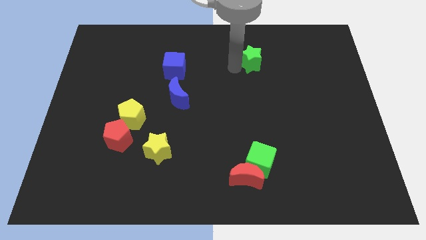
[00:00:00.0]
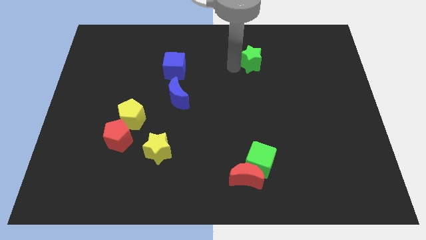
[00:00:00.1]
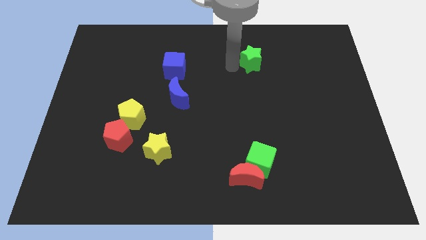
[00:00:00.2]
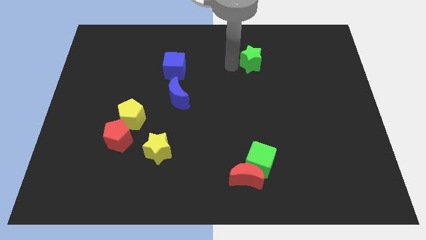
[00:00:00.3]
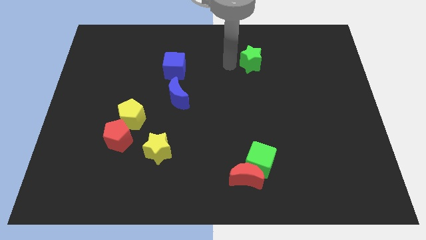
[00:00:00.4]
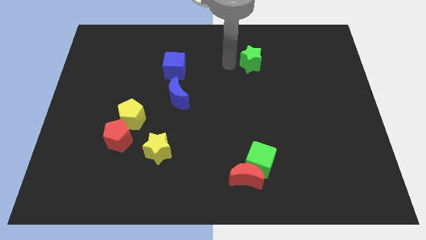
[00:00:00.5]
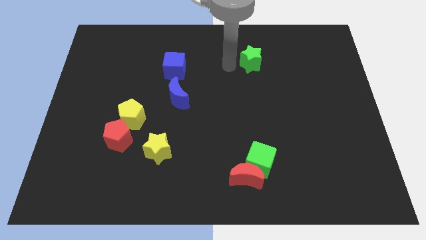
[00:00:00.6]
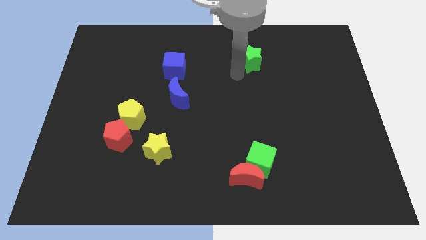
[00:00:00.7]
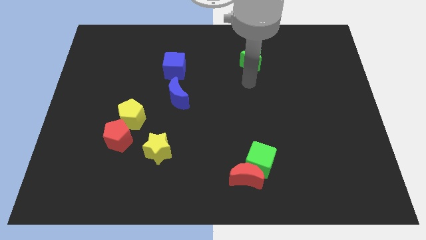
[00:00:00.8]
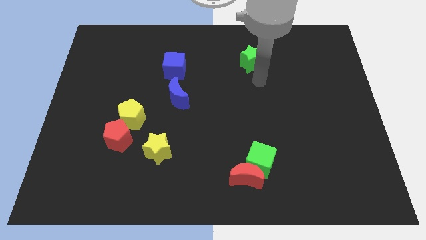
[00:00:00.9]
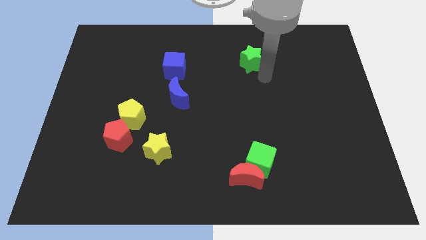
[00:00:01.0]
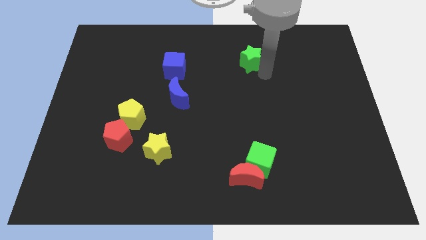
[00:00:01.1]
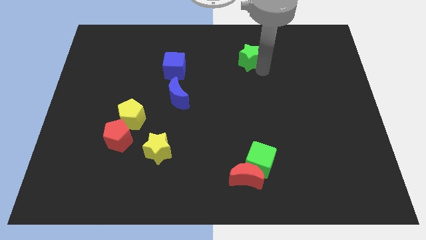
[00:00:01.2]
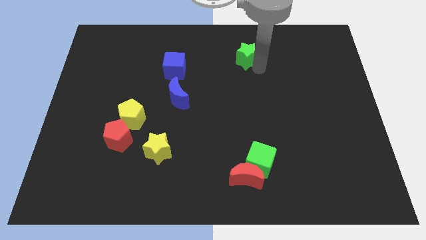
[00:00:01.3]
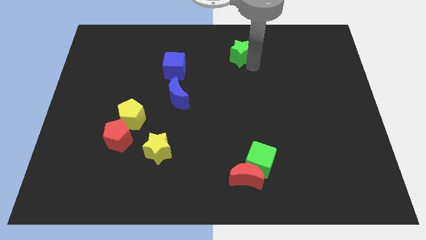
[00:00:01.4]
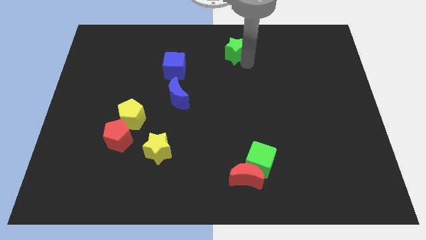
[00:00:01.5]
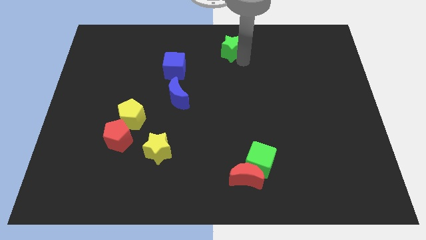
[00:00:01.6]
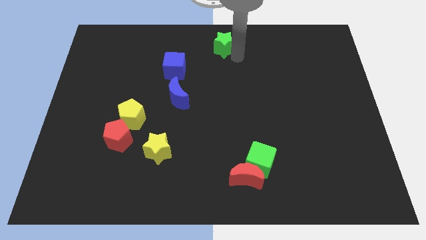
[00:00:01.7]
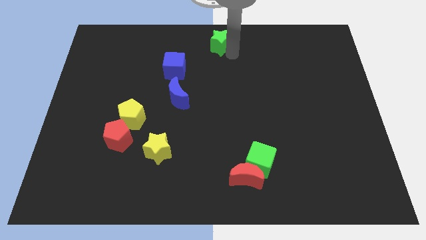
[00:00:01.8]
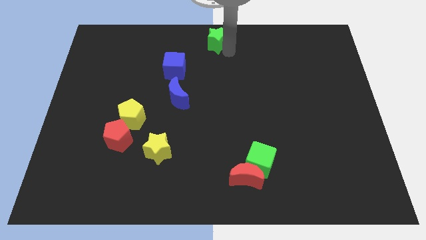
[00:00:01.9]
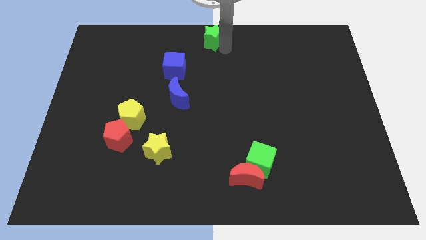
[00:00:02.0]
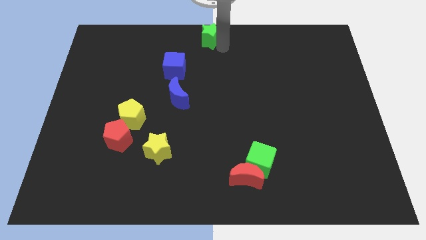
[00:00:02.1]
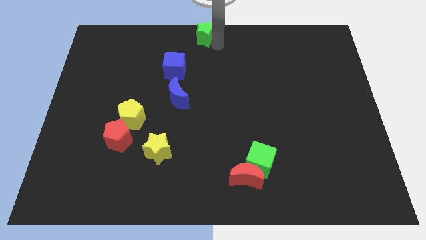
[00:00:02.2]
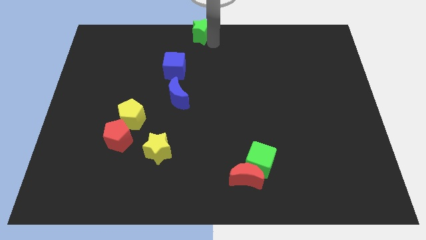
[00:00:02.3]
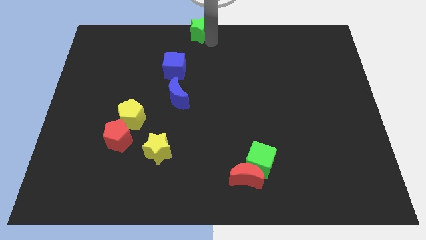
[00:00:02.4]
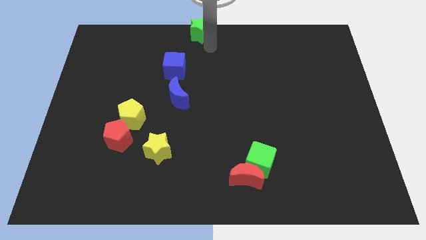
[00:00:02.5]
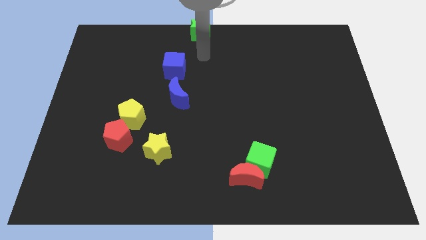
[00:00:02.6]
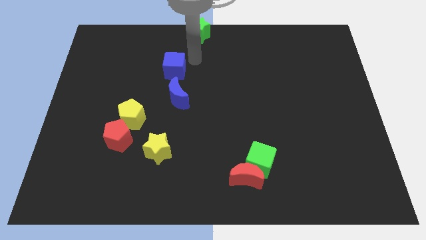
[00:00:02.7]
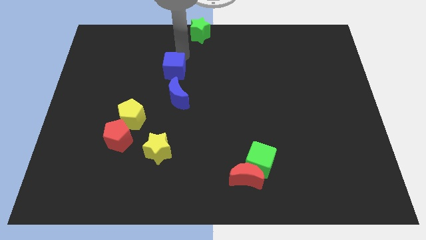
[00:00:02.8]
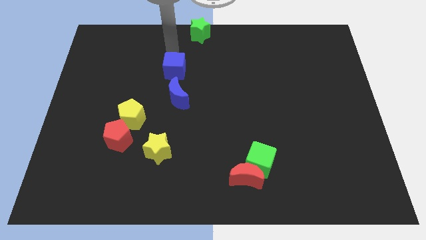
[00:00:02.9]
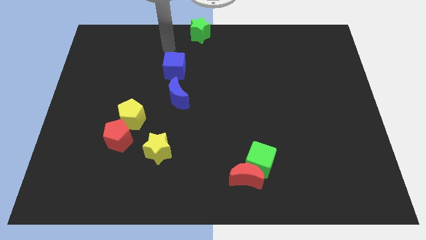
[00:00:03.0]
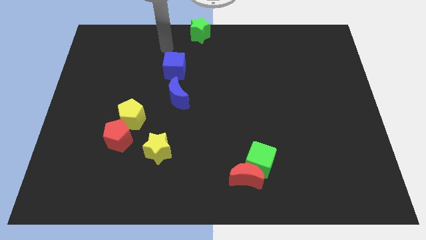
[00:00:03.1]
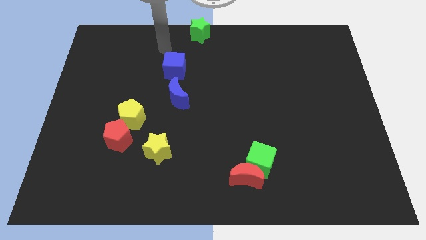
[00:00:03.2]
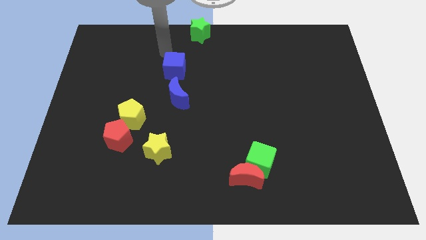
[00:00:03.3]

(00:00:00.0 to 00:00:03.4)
place the green star above the blue cube

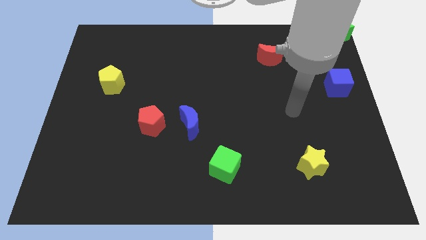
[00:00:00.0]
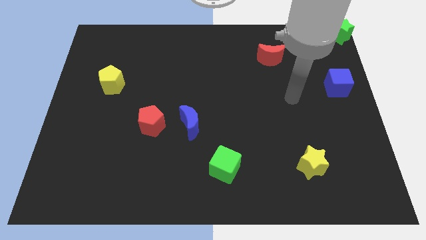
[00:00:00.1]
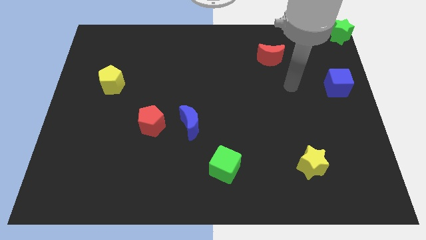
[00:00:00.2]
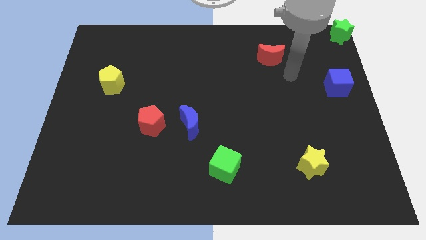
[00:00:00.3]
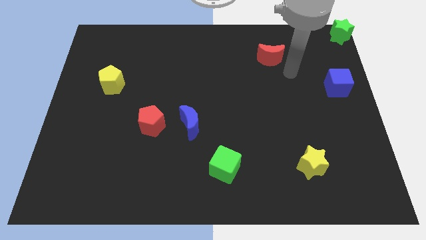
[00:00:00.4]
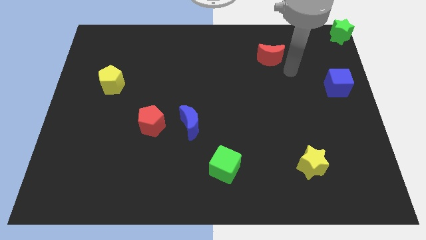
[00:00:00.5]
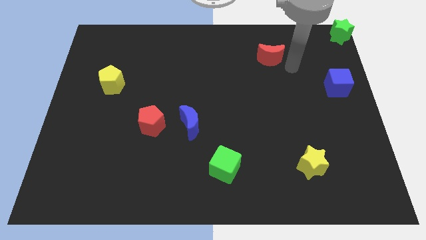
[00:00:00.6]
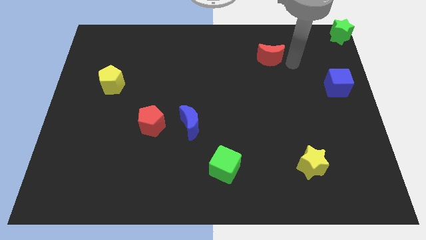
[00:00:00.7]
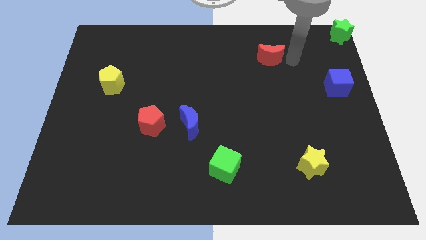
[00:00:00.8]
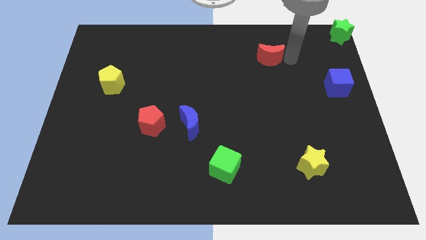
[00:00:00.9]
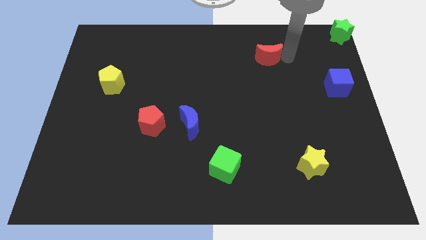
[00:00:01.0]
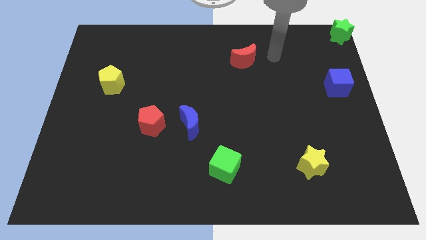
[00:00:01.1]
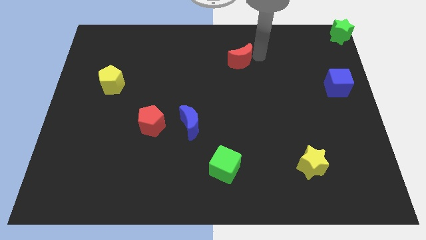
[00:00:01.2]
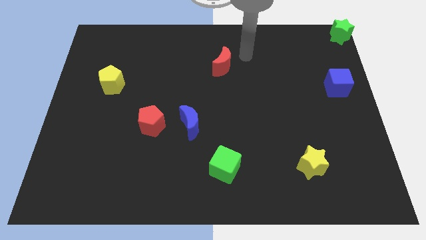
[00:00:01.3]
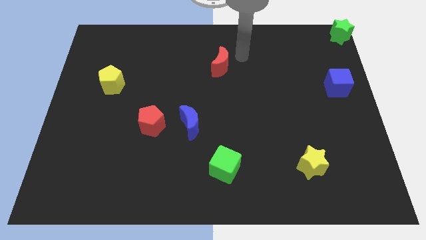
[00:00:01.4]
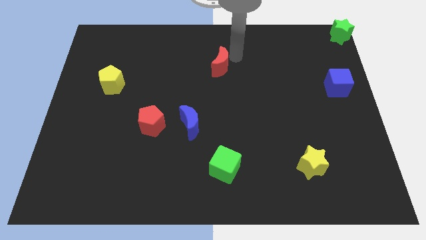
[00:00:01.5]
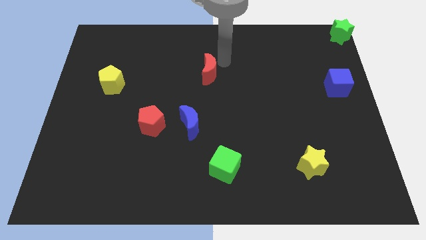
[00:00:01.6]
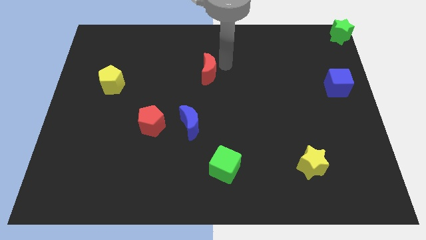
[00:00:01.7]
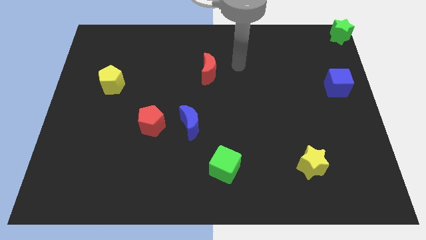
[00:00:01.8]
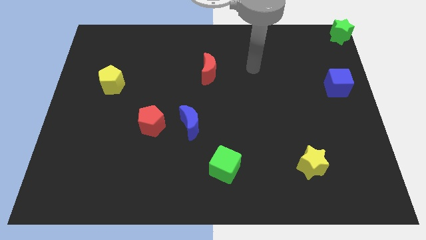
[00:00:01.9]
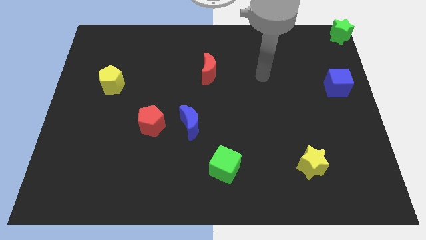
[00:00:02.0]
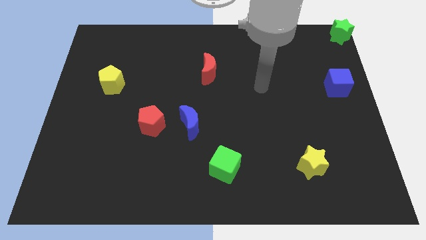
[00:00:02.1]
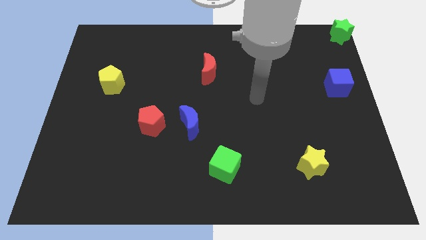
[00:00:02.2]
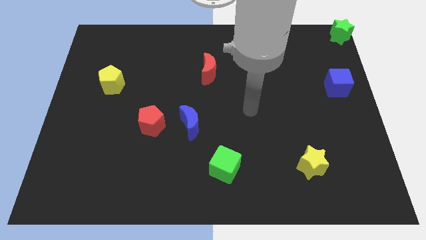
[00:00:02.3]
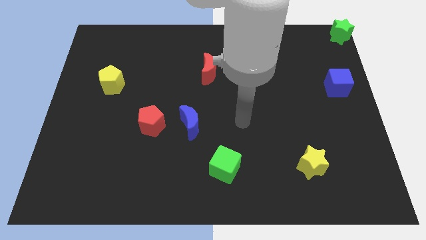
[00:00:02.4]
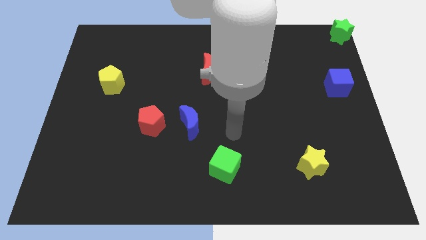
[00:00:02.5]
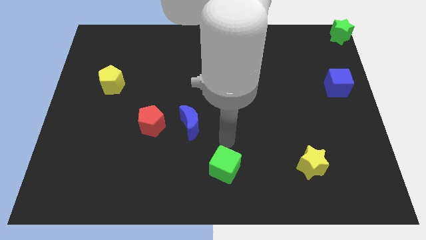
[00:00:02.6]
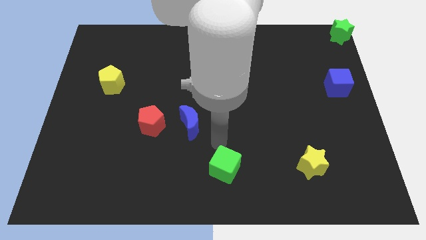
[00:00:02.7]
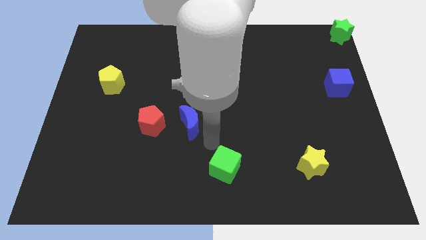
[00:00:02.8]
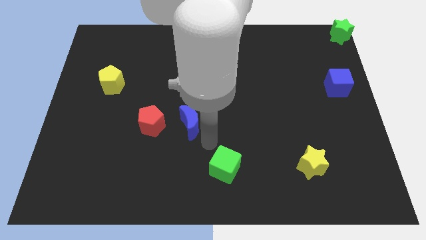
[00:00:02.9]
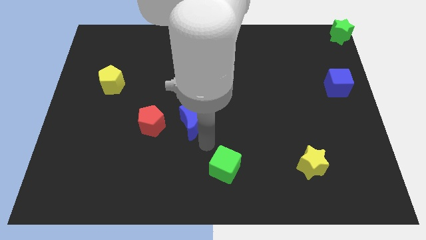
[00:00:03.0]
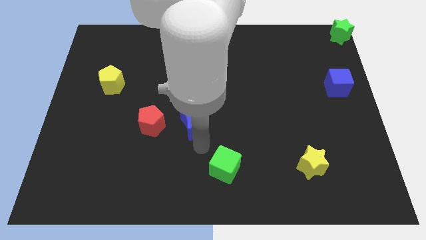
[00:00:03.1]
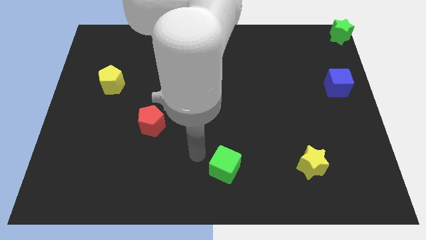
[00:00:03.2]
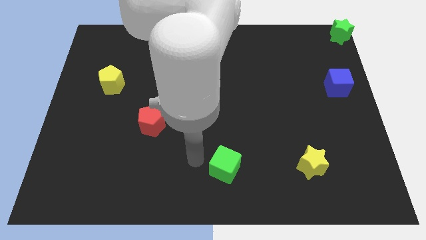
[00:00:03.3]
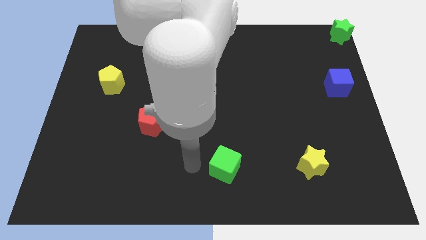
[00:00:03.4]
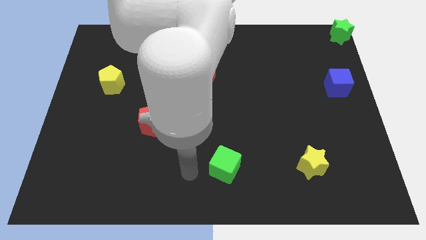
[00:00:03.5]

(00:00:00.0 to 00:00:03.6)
move the red crescent diagonally on the top left side of the yellow star

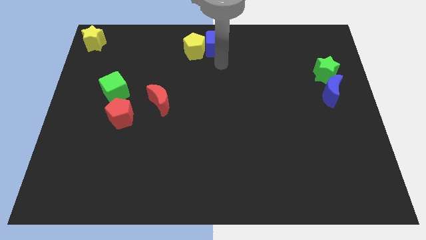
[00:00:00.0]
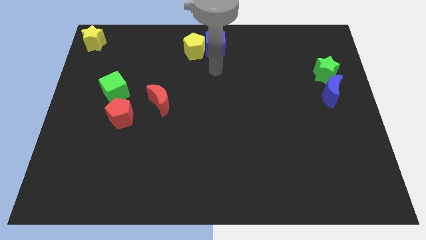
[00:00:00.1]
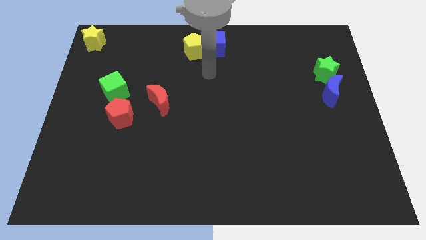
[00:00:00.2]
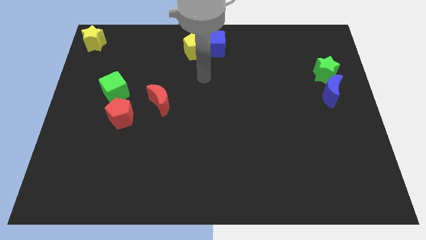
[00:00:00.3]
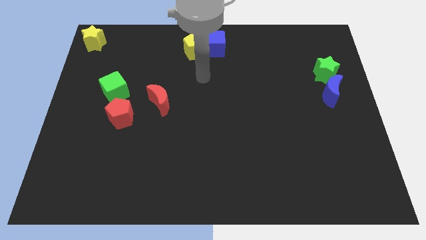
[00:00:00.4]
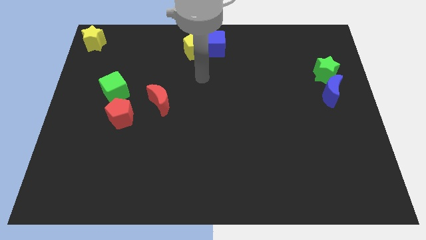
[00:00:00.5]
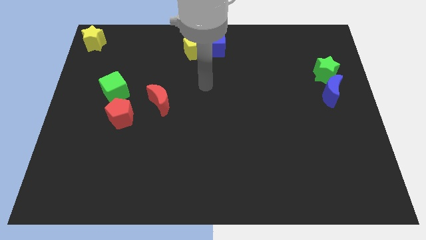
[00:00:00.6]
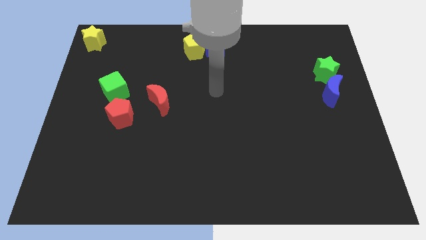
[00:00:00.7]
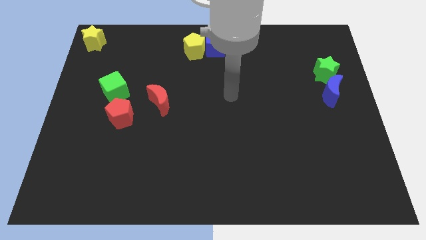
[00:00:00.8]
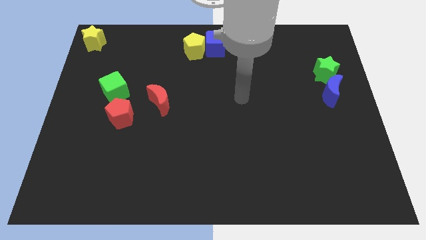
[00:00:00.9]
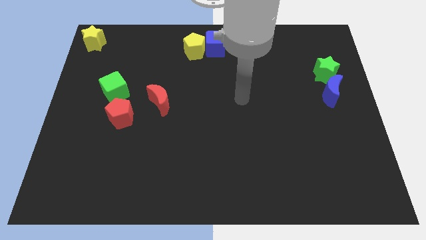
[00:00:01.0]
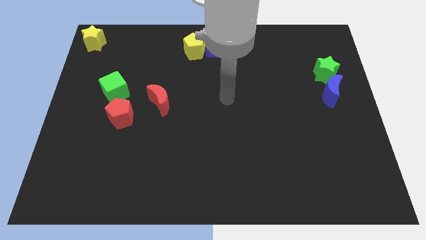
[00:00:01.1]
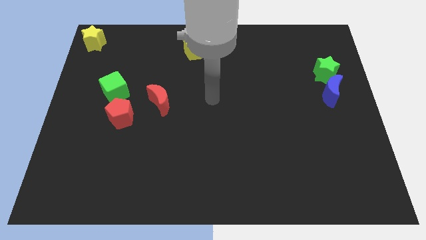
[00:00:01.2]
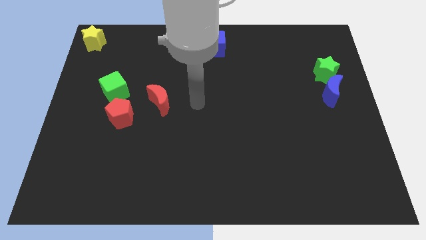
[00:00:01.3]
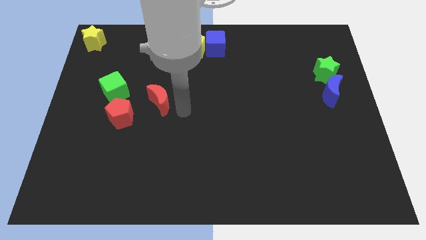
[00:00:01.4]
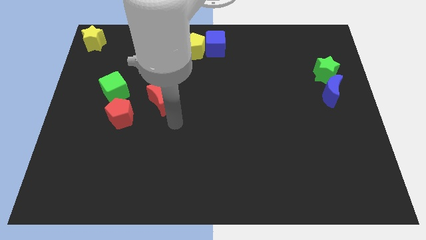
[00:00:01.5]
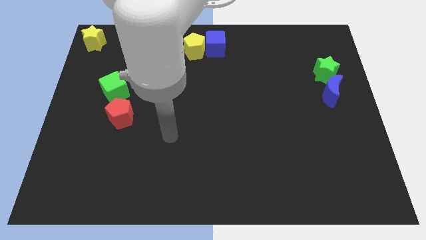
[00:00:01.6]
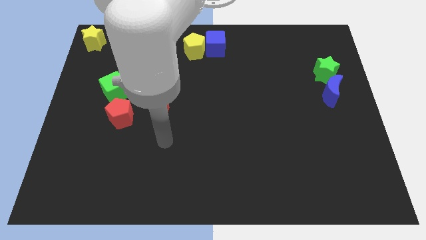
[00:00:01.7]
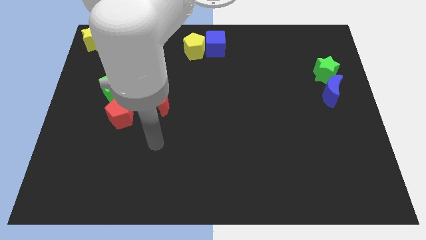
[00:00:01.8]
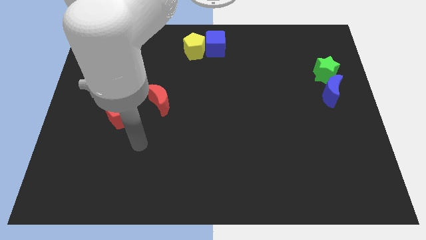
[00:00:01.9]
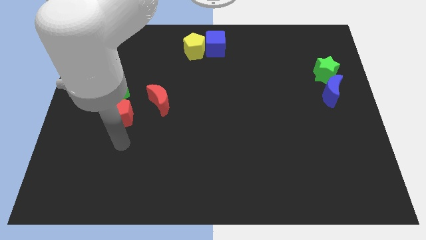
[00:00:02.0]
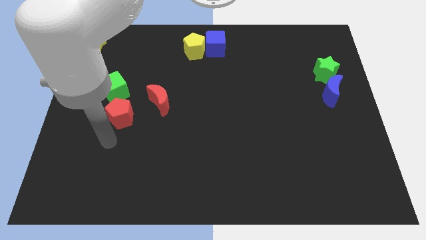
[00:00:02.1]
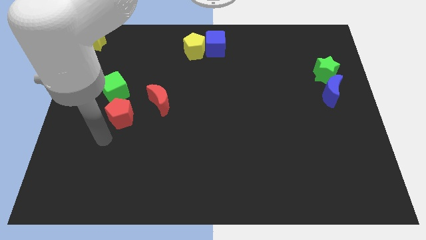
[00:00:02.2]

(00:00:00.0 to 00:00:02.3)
point the arm at the bottom side of the red pentagon
